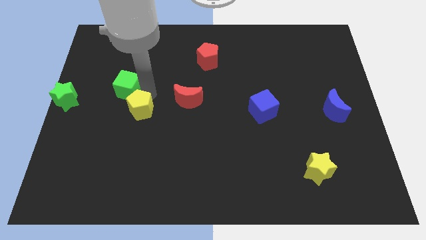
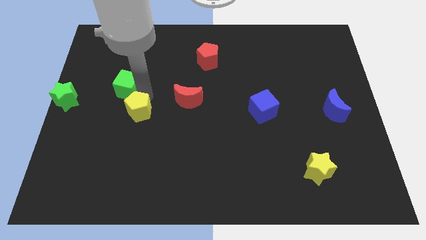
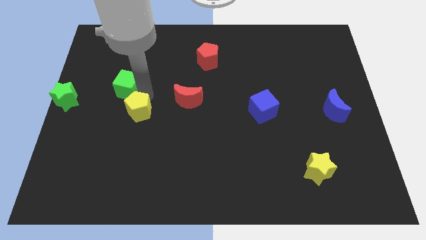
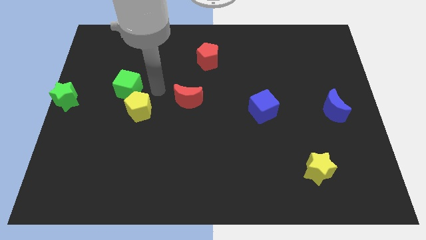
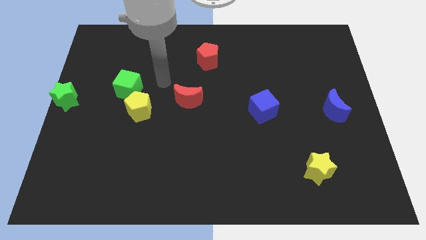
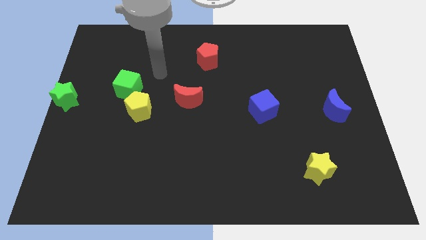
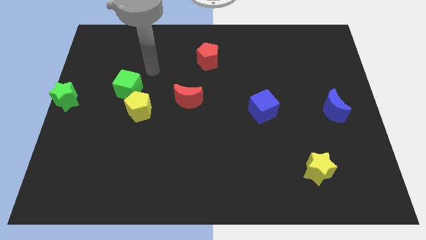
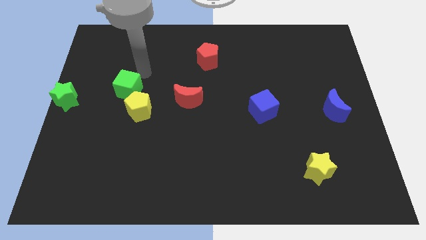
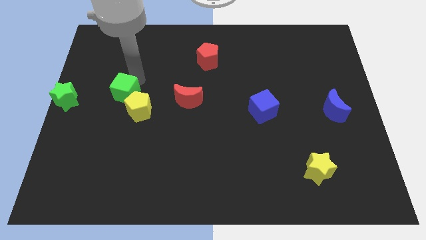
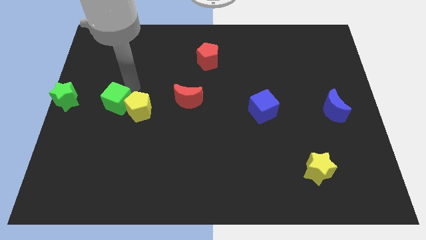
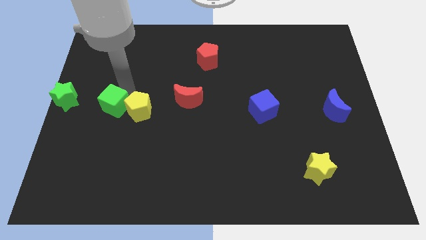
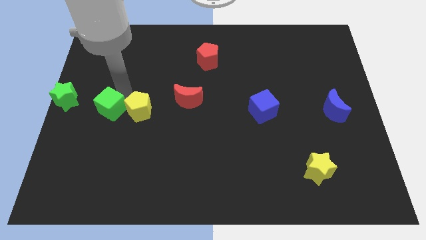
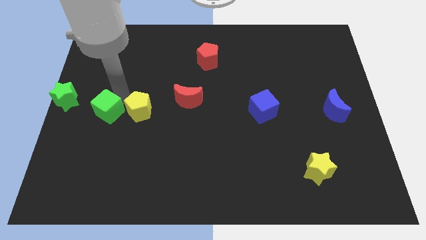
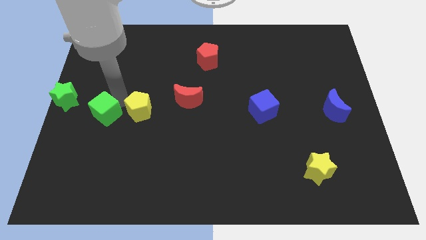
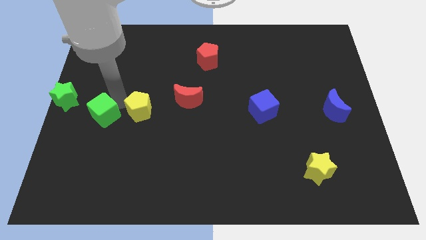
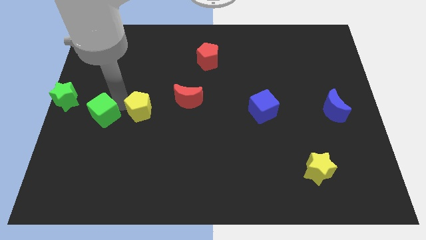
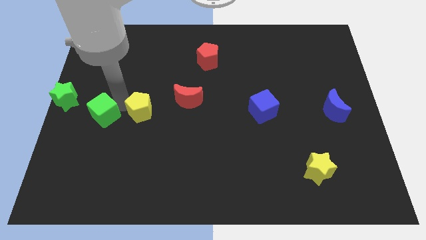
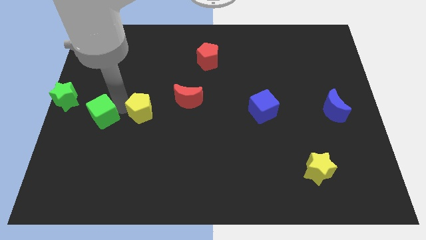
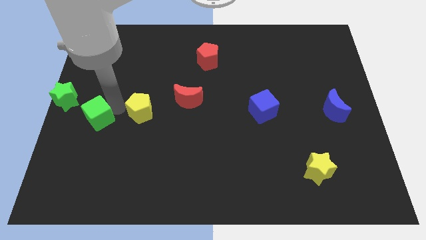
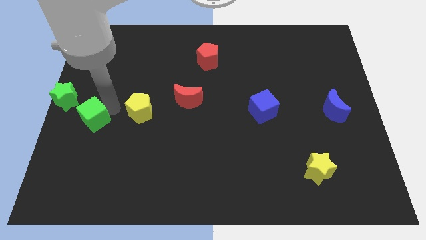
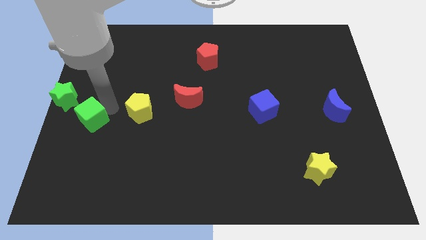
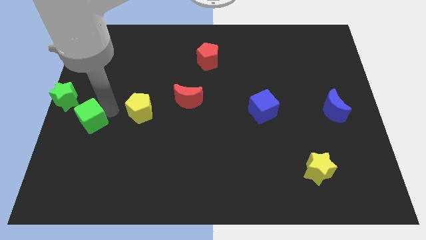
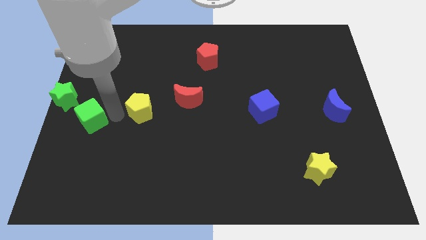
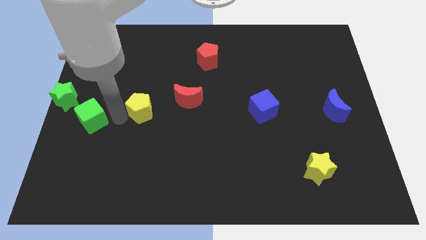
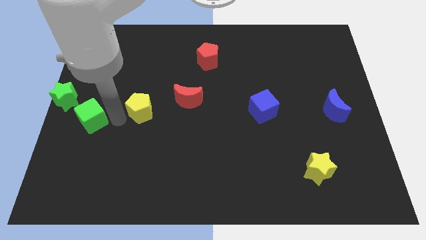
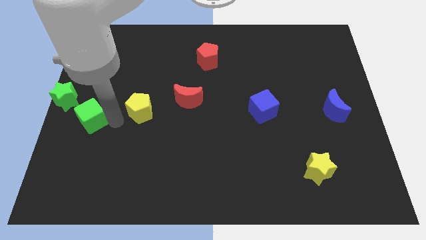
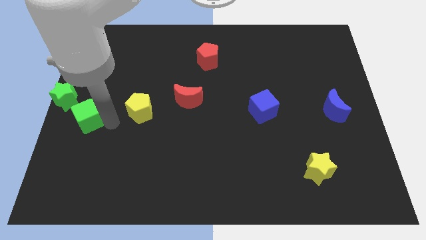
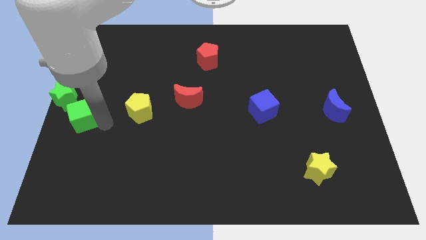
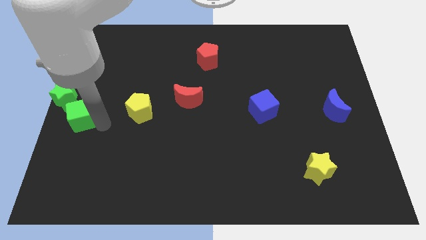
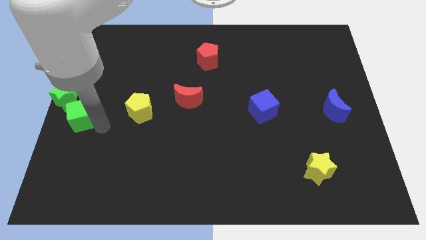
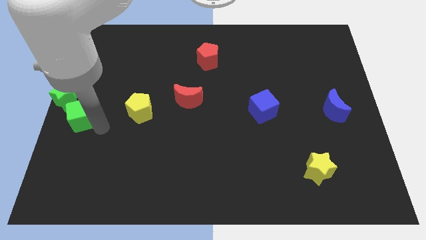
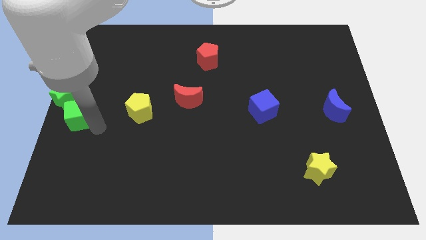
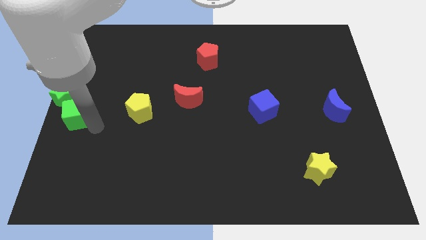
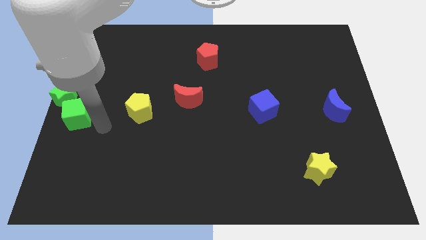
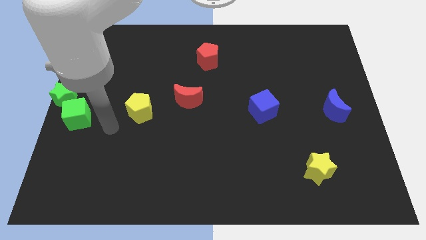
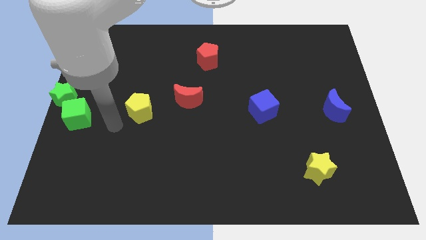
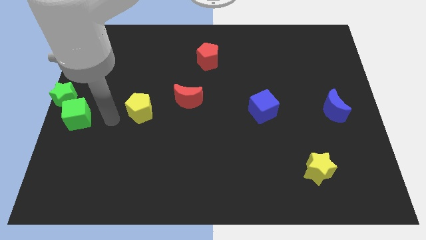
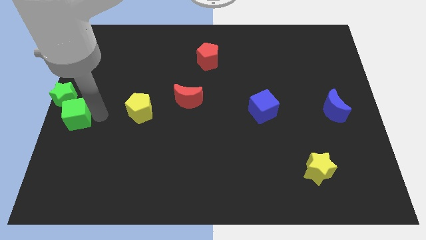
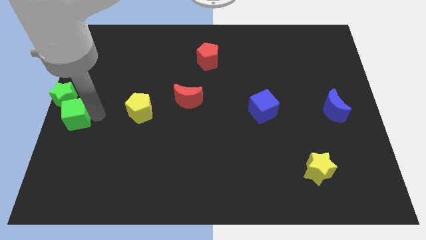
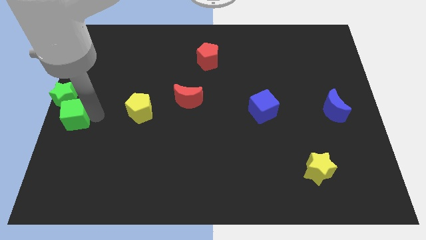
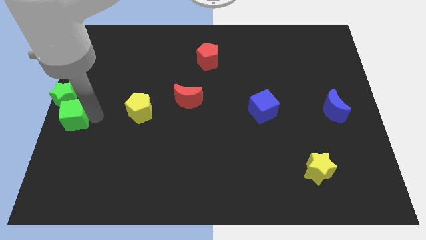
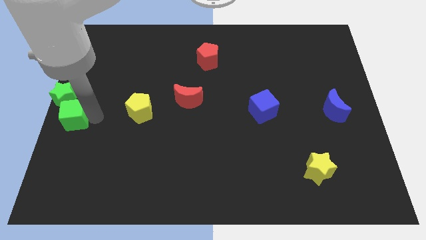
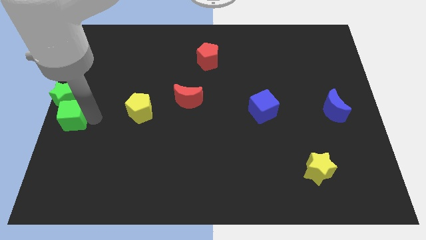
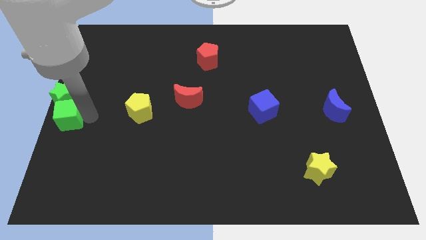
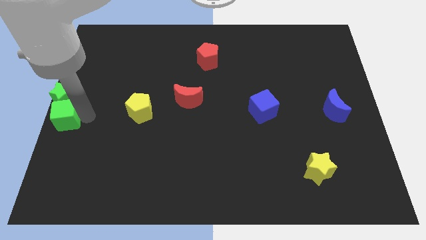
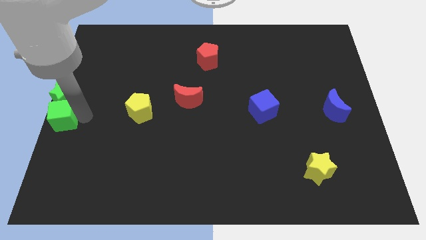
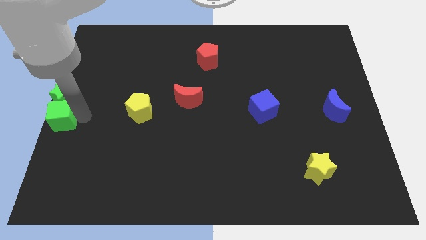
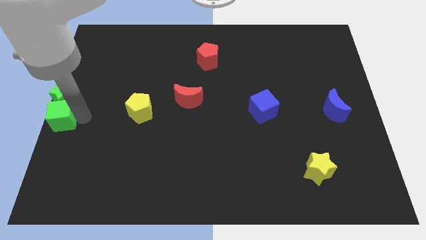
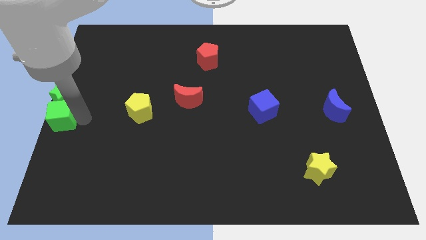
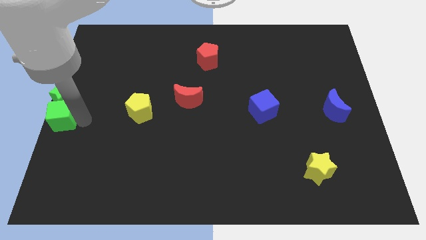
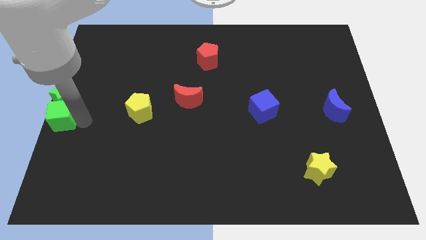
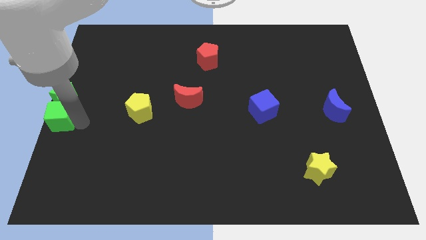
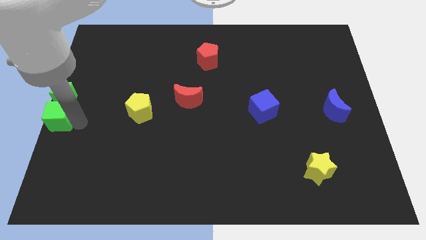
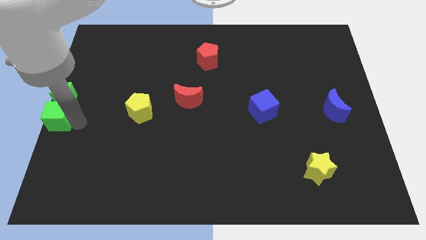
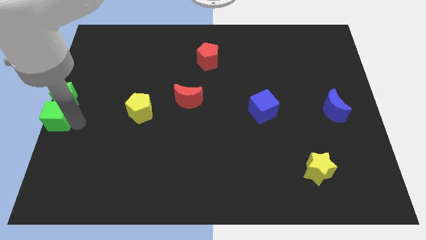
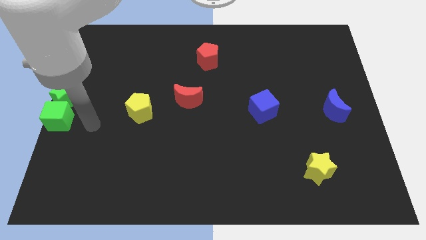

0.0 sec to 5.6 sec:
push the green cube into the bottom side of the green star

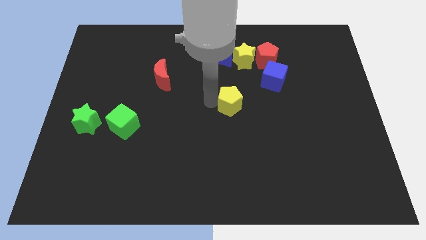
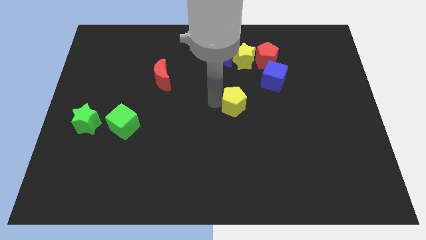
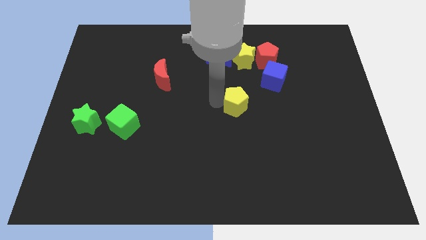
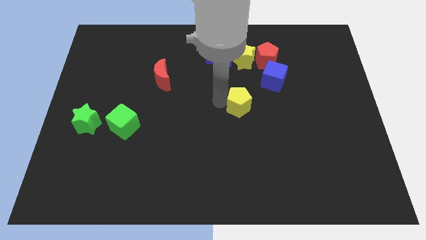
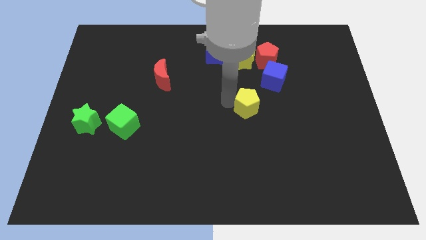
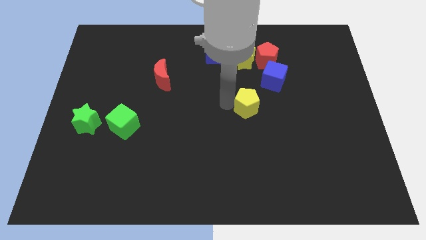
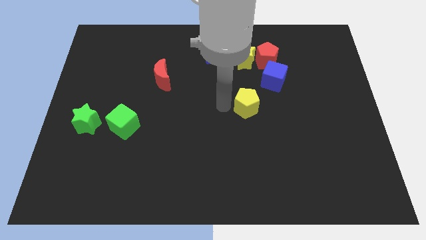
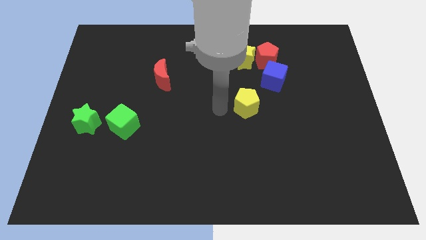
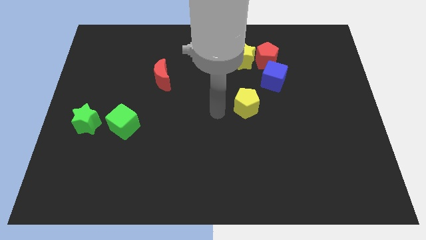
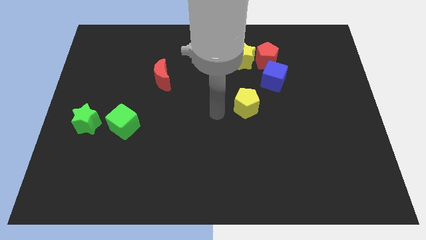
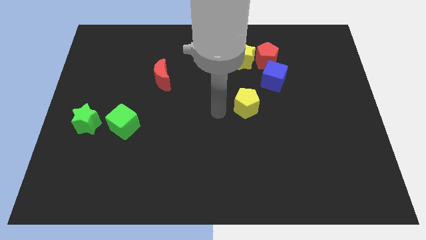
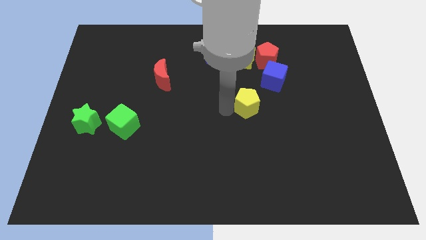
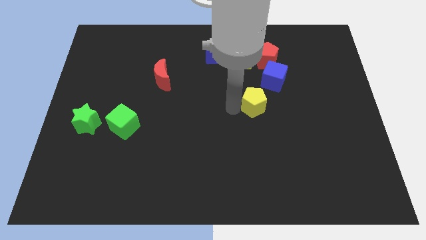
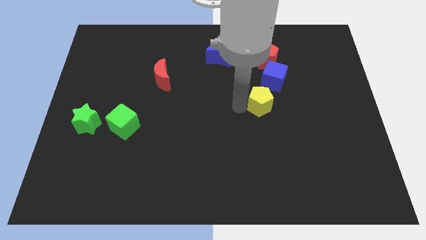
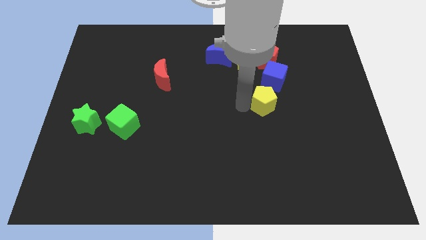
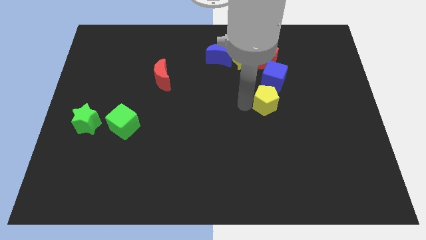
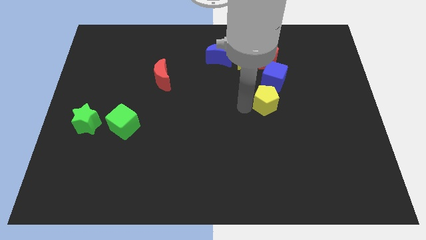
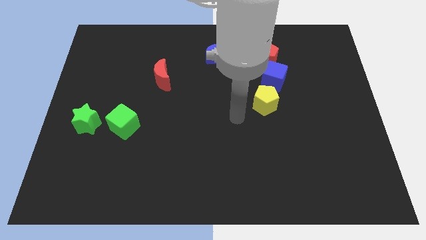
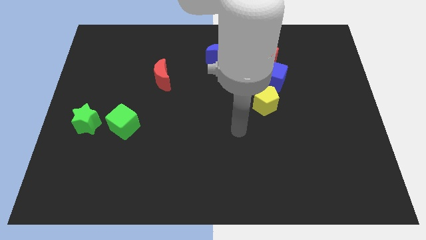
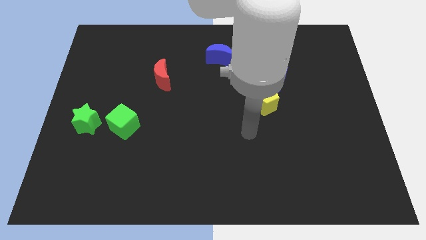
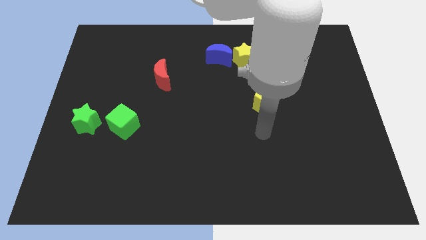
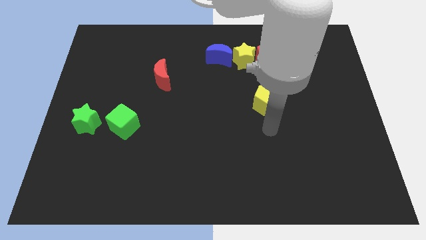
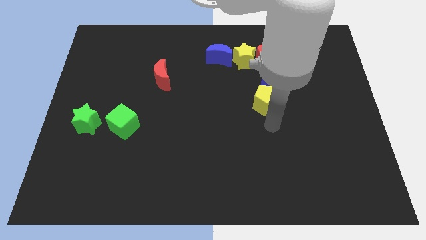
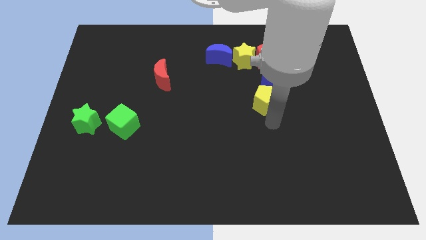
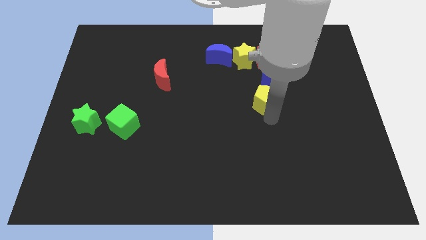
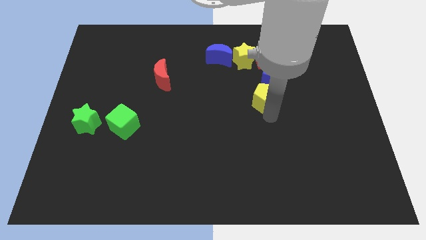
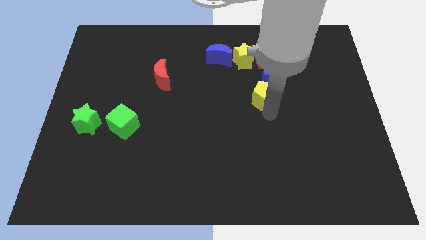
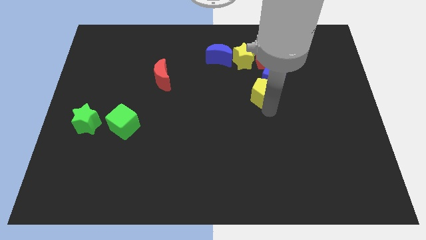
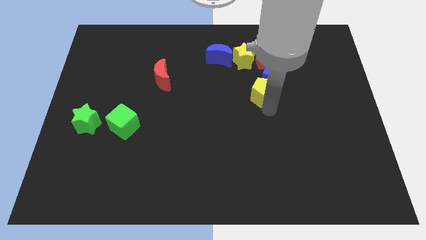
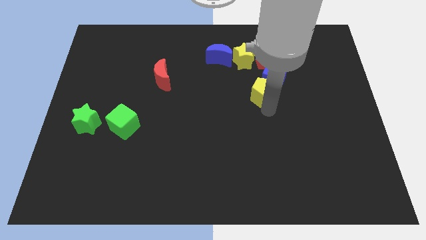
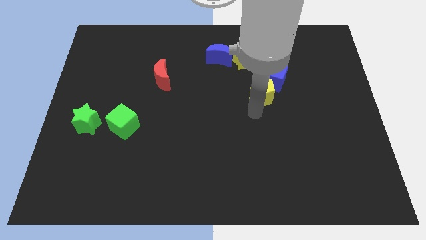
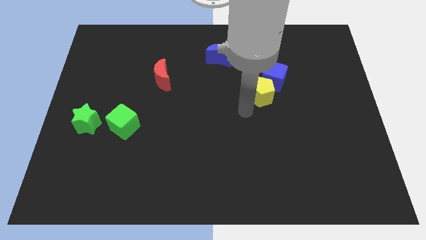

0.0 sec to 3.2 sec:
push the yellow pentagon into the blue cube

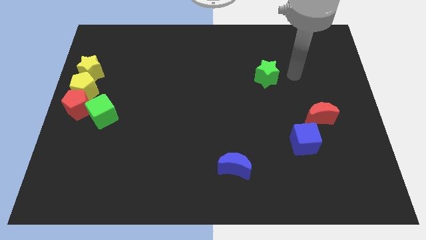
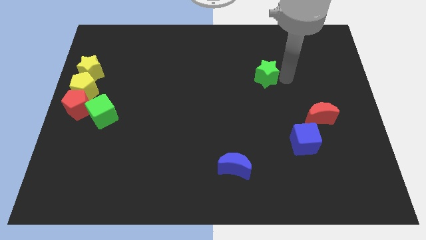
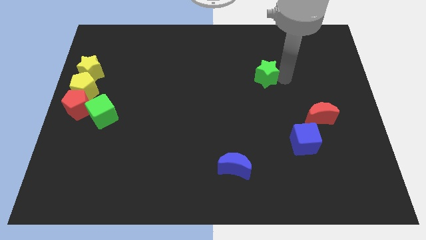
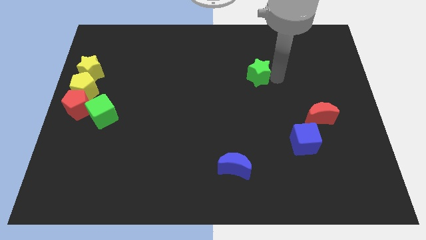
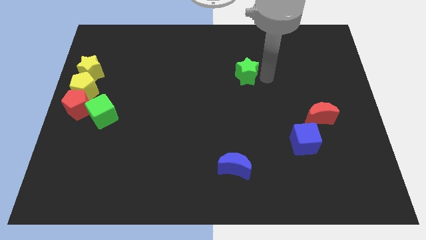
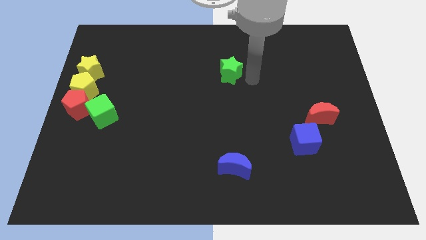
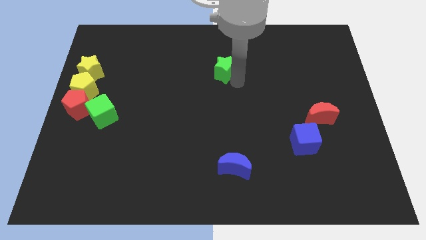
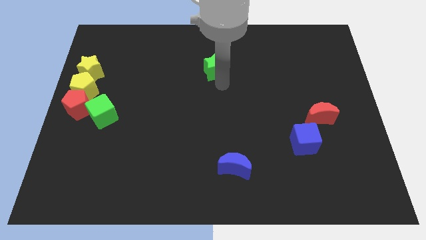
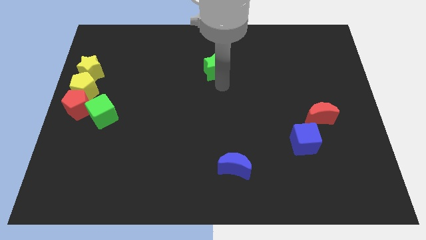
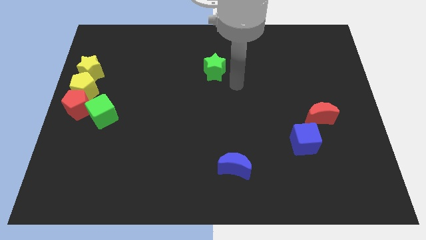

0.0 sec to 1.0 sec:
place the green star above the blue moon
